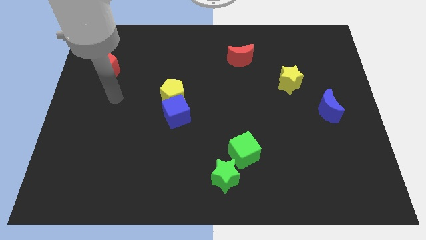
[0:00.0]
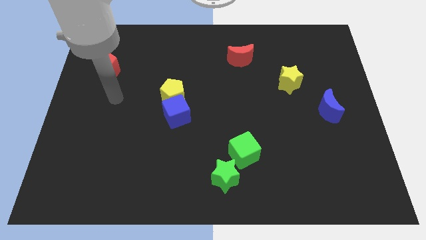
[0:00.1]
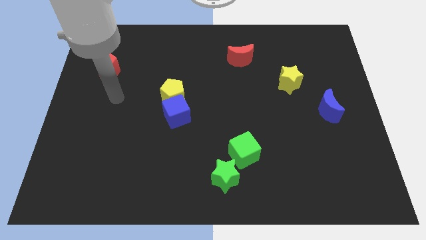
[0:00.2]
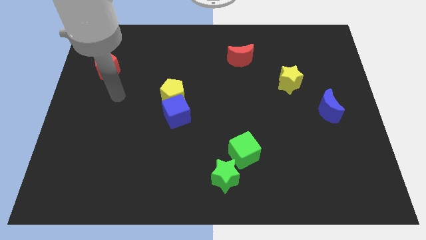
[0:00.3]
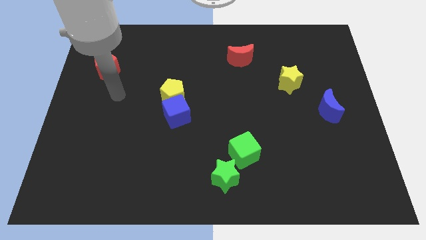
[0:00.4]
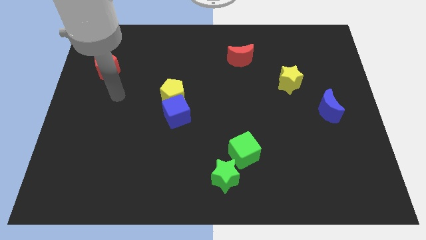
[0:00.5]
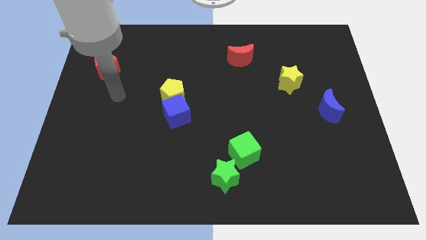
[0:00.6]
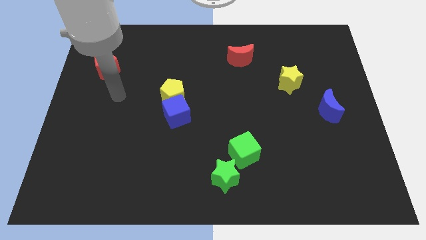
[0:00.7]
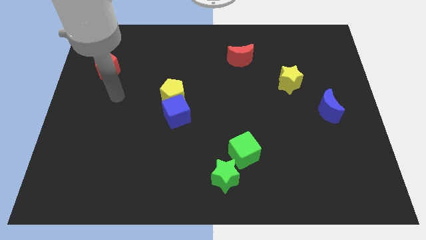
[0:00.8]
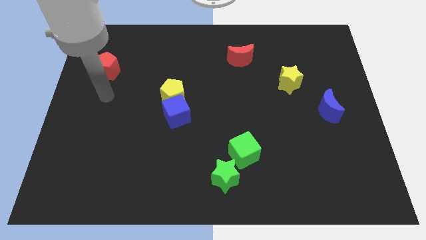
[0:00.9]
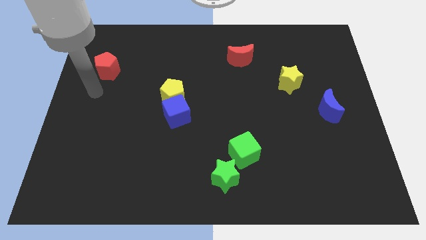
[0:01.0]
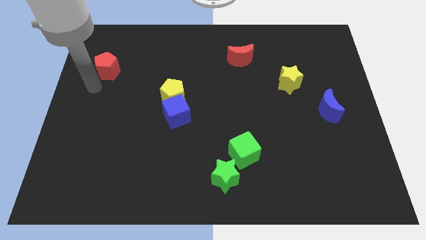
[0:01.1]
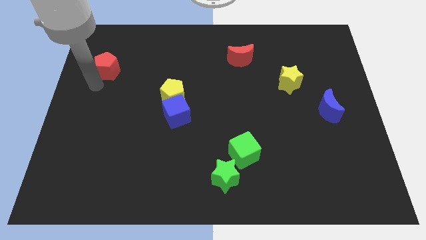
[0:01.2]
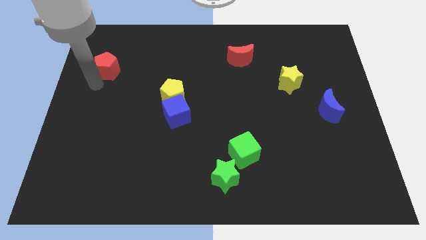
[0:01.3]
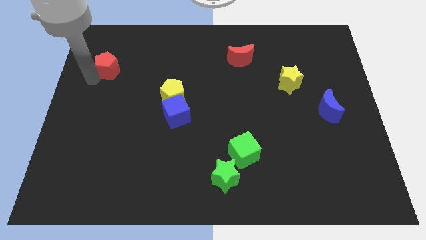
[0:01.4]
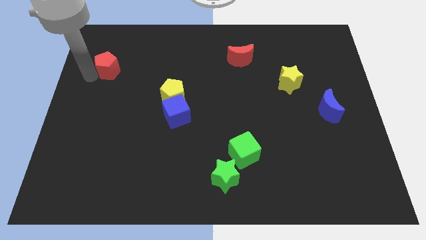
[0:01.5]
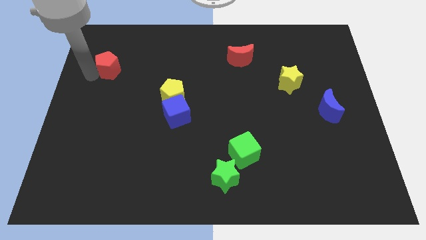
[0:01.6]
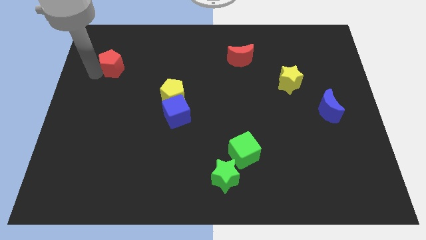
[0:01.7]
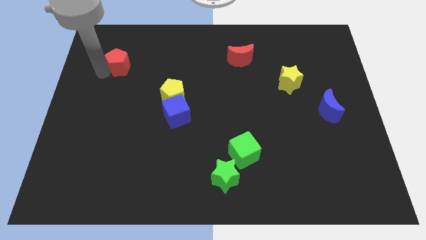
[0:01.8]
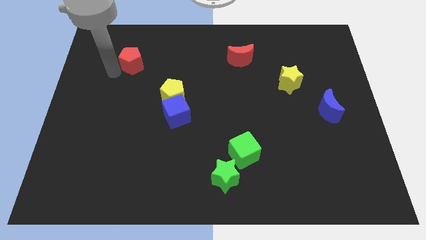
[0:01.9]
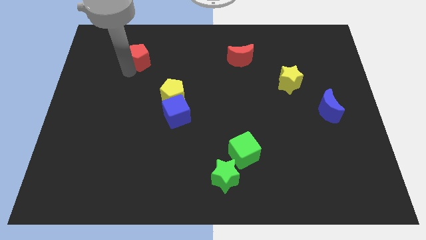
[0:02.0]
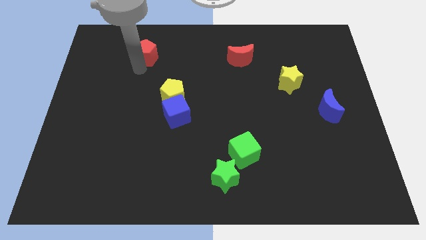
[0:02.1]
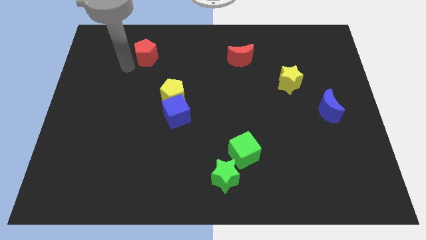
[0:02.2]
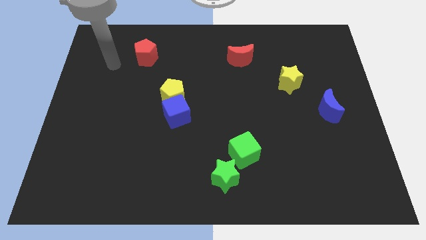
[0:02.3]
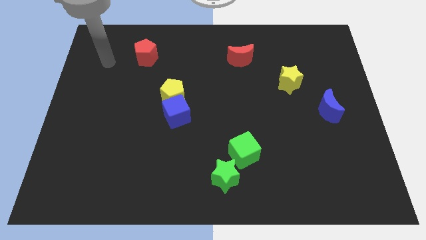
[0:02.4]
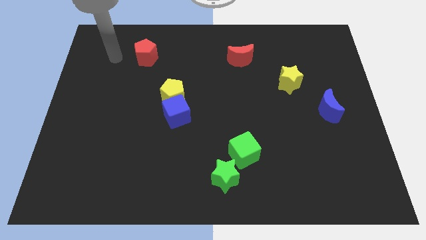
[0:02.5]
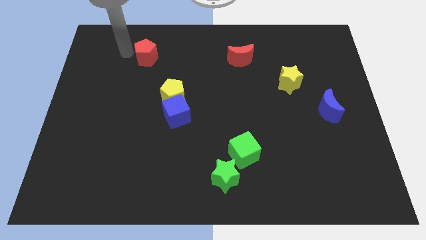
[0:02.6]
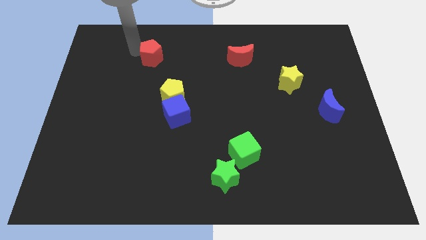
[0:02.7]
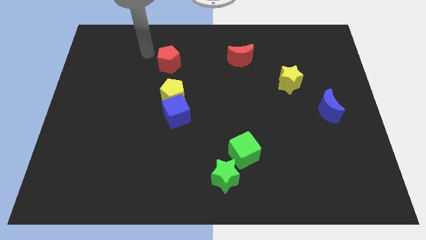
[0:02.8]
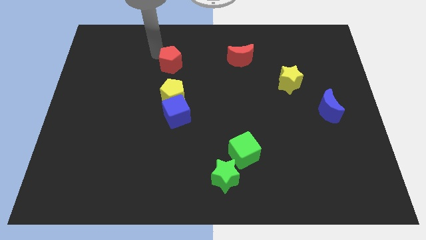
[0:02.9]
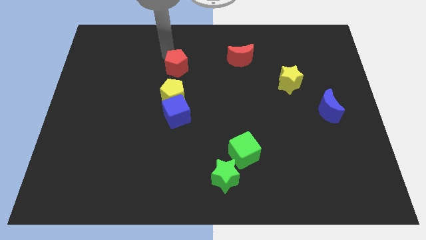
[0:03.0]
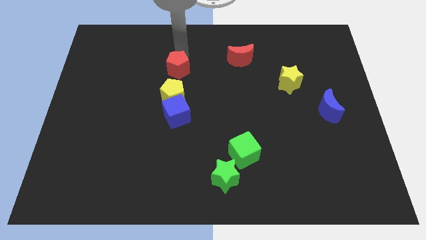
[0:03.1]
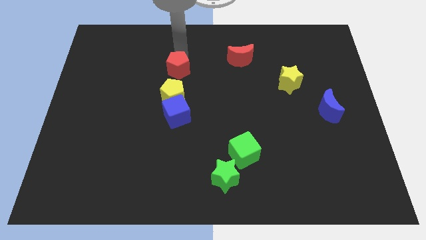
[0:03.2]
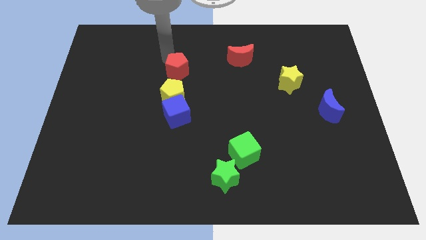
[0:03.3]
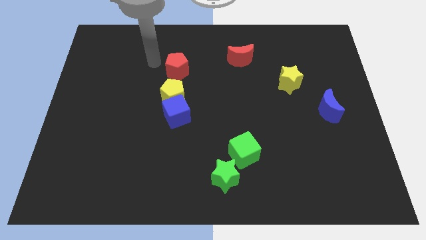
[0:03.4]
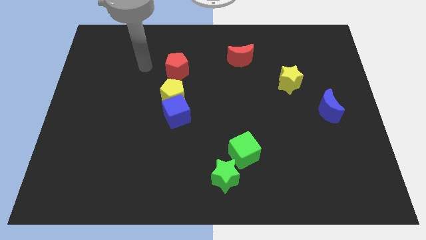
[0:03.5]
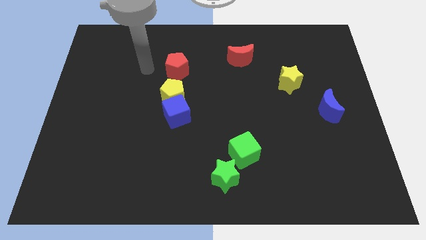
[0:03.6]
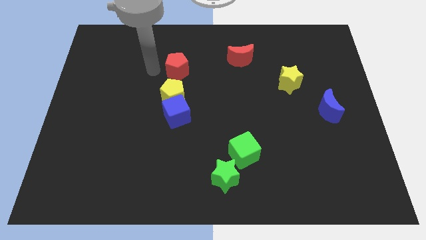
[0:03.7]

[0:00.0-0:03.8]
place the red pentagon above the yellow pentagon

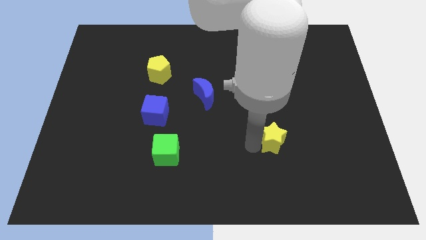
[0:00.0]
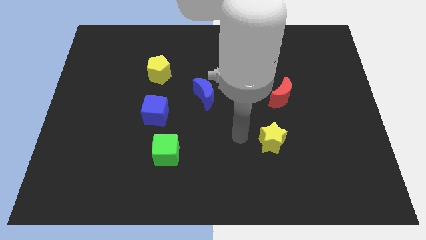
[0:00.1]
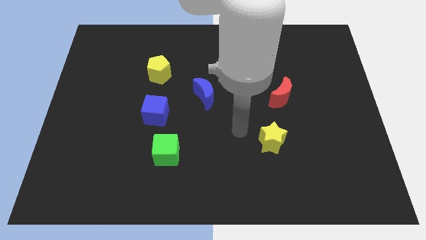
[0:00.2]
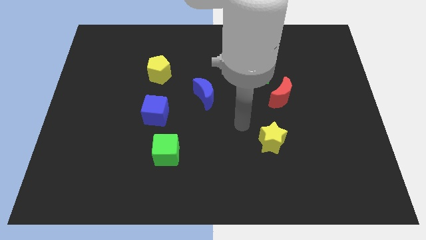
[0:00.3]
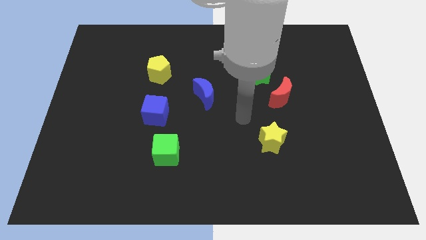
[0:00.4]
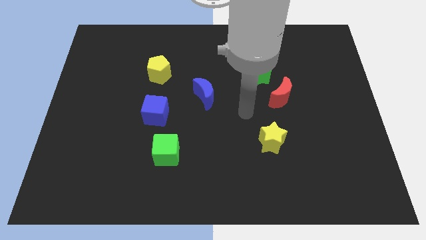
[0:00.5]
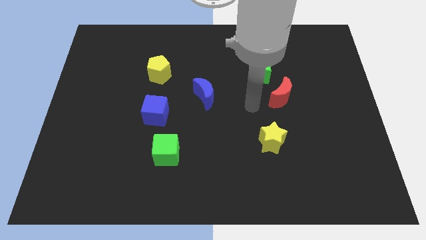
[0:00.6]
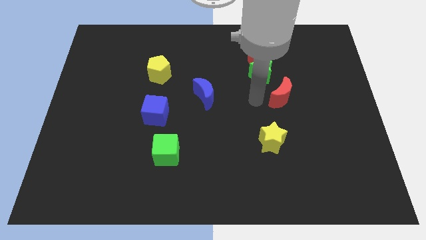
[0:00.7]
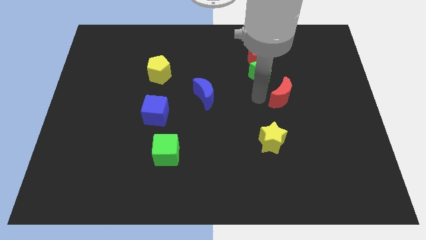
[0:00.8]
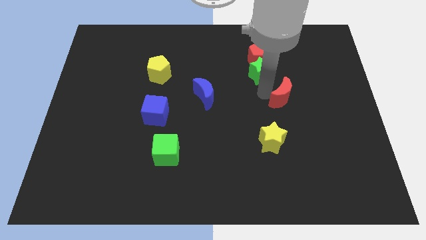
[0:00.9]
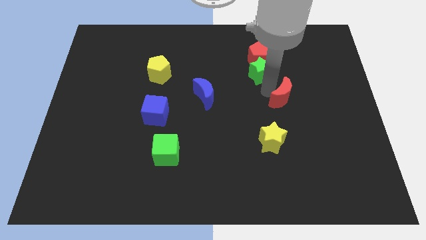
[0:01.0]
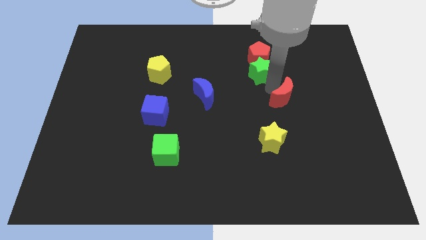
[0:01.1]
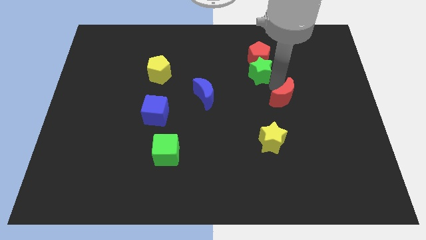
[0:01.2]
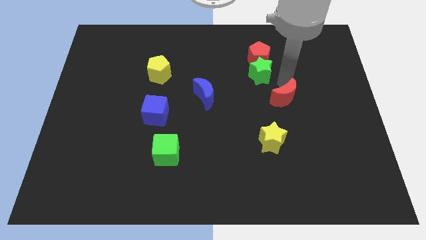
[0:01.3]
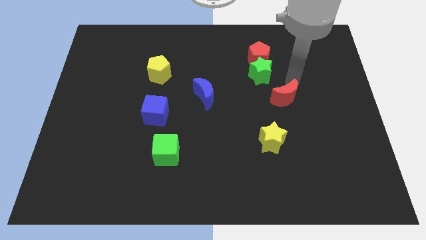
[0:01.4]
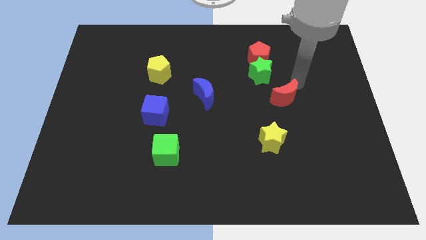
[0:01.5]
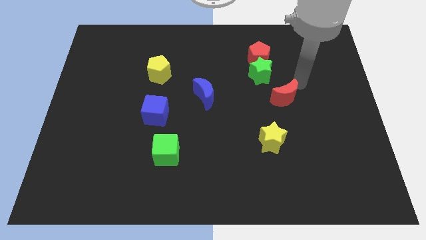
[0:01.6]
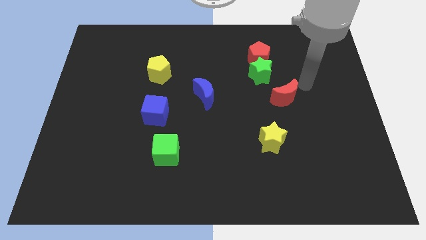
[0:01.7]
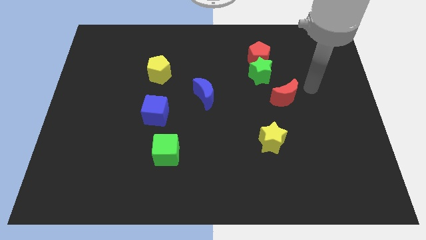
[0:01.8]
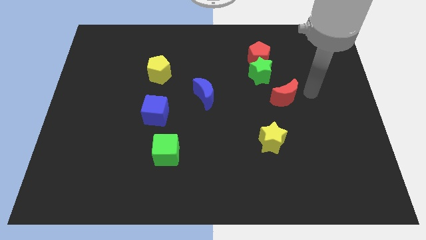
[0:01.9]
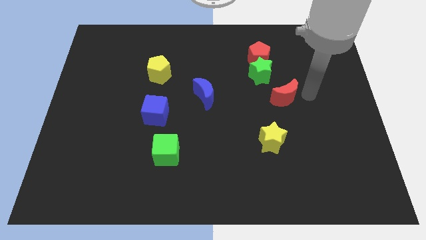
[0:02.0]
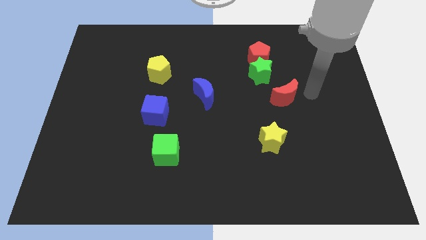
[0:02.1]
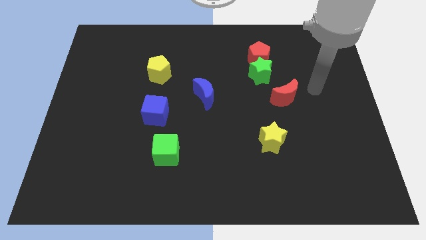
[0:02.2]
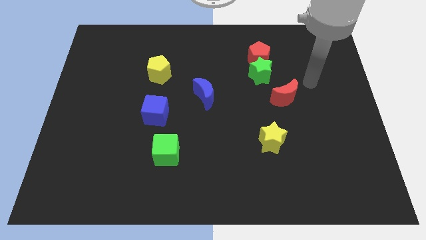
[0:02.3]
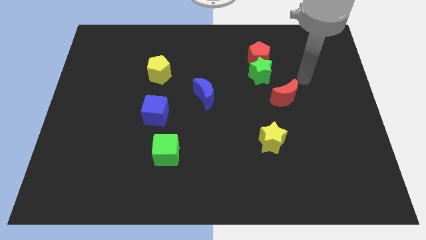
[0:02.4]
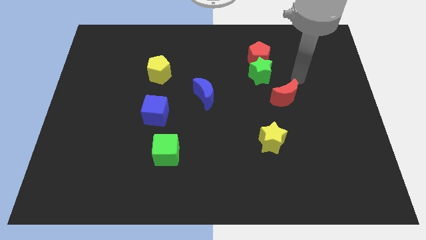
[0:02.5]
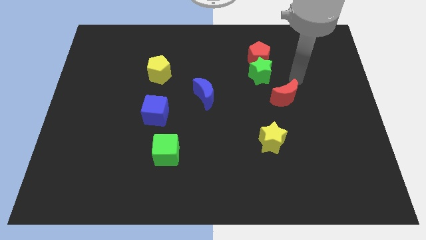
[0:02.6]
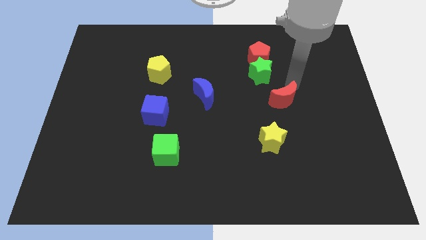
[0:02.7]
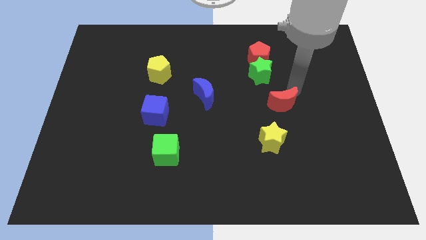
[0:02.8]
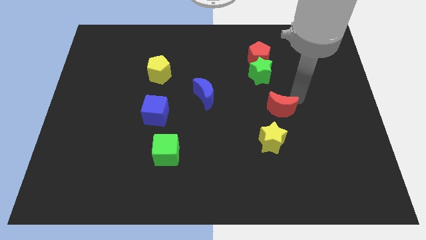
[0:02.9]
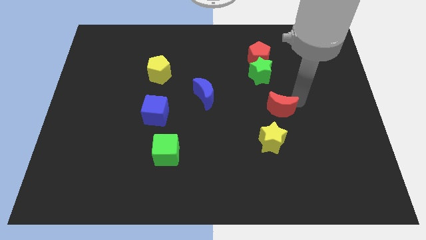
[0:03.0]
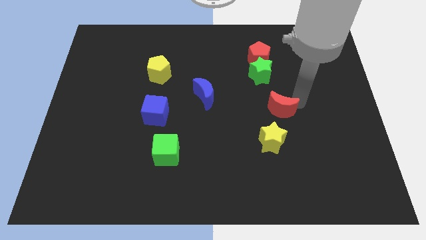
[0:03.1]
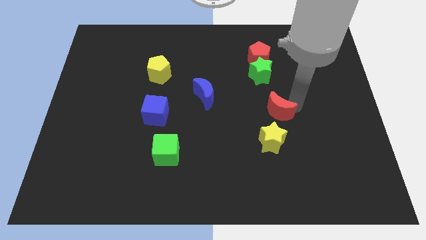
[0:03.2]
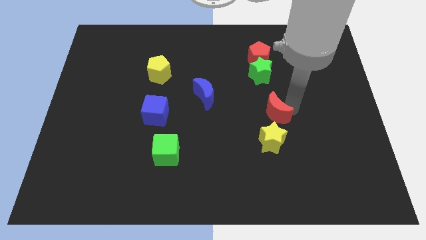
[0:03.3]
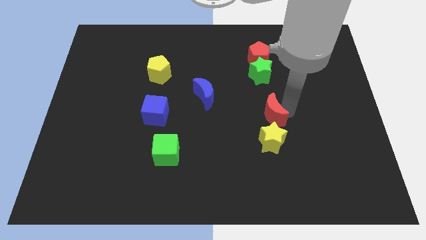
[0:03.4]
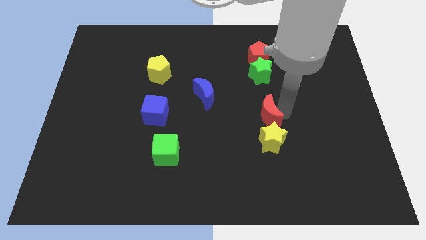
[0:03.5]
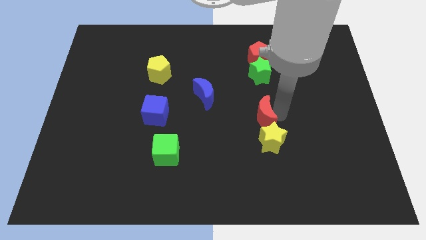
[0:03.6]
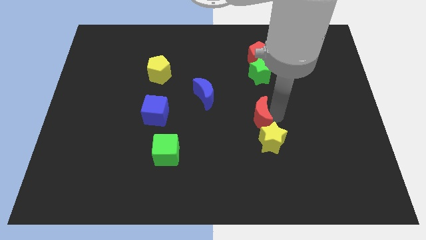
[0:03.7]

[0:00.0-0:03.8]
move the red crescent on the top of the yellow star

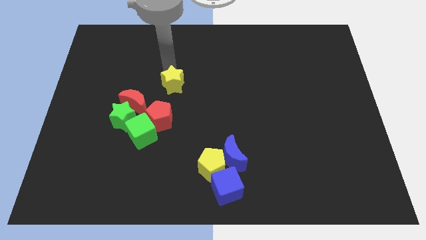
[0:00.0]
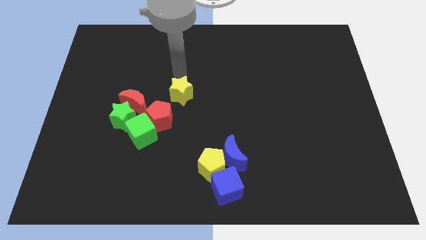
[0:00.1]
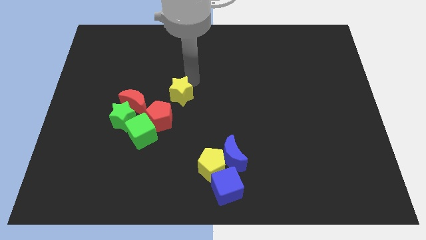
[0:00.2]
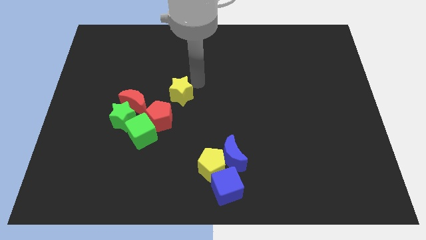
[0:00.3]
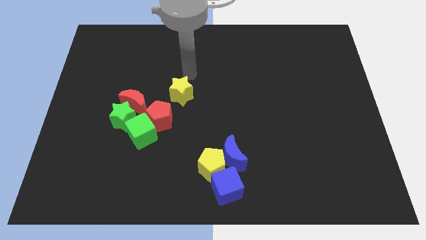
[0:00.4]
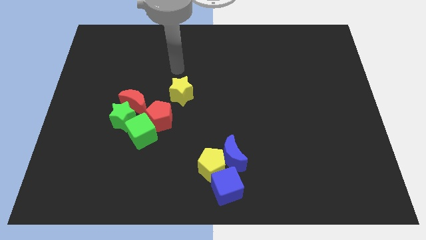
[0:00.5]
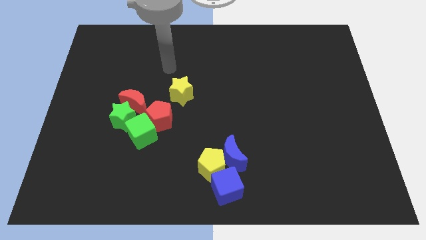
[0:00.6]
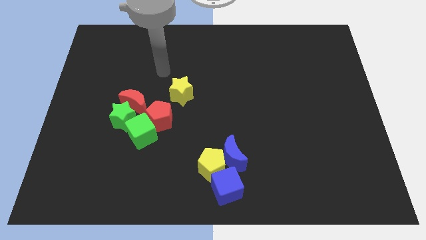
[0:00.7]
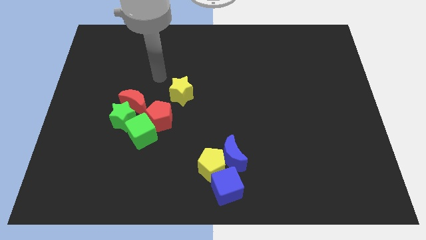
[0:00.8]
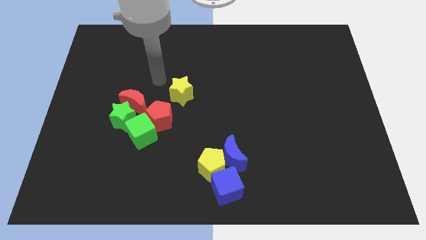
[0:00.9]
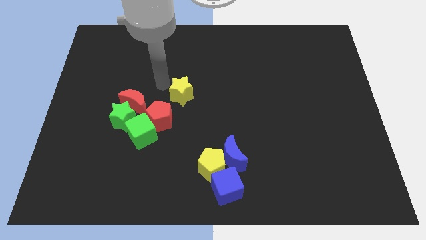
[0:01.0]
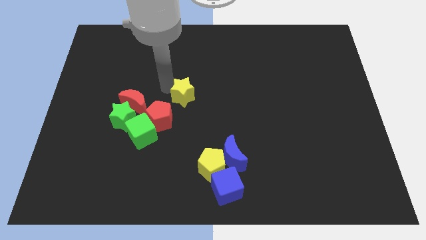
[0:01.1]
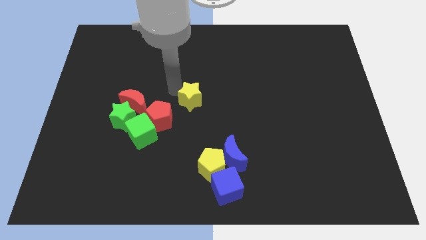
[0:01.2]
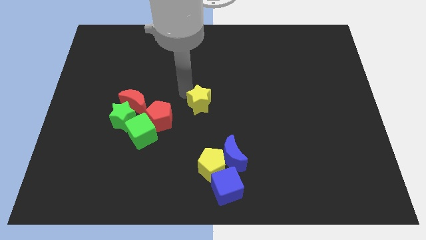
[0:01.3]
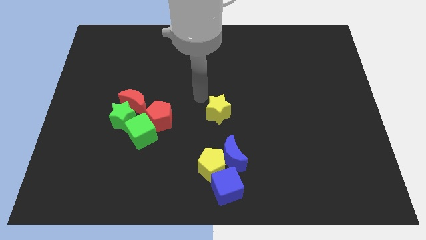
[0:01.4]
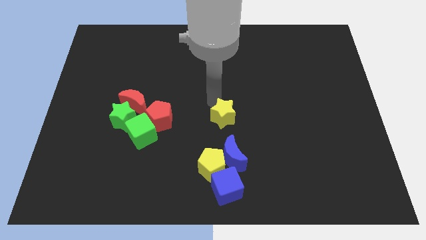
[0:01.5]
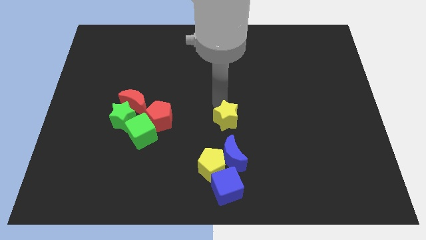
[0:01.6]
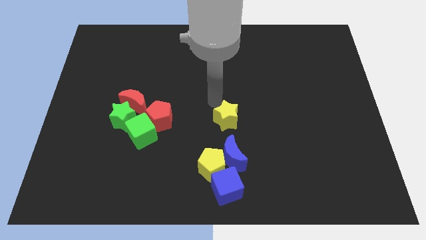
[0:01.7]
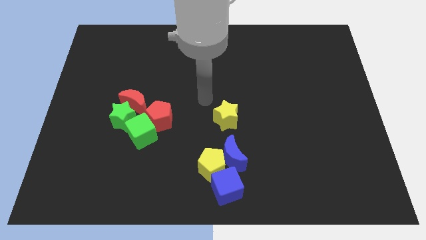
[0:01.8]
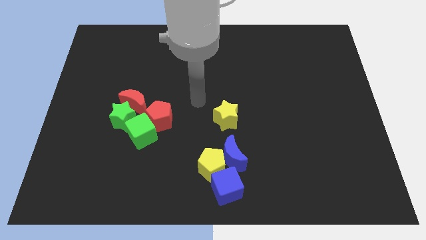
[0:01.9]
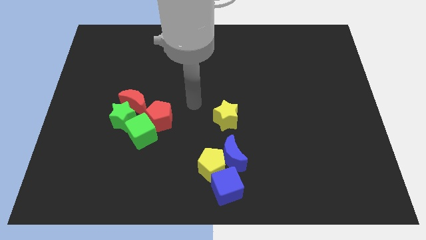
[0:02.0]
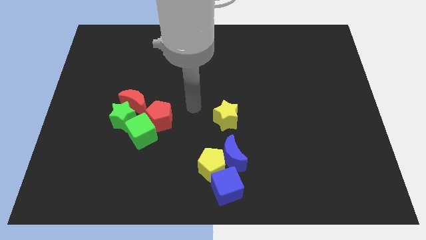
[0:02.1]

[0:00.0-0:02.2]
slide the yellow star to the top of the blue crescent
